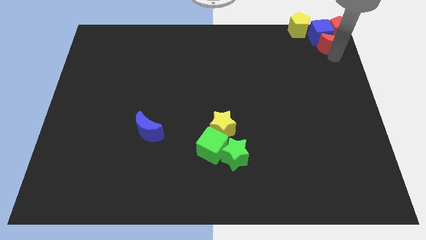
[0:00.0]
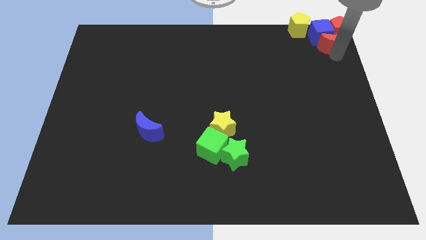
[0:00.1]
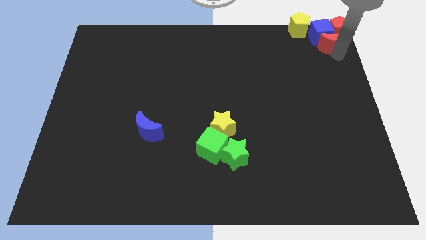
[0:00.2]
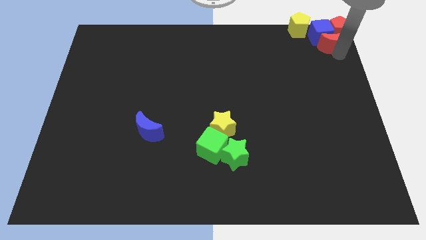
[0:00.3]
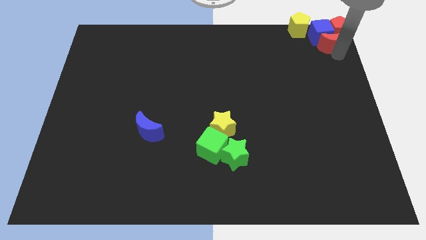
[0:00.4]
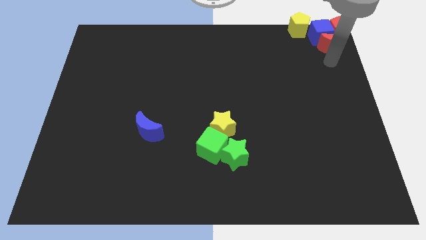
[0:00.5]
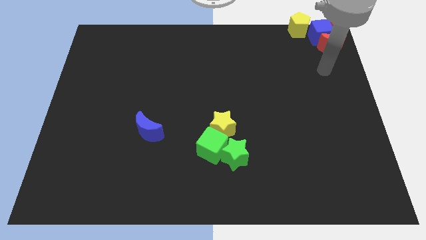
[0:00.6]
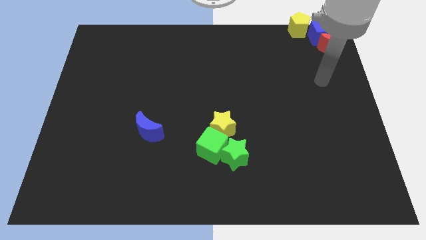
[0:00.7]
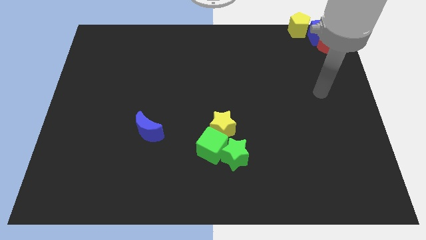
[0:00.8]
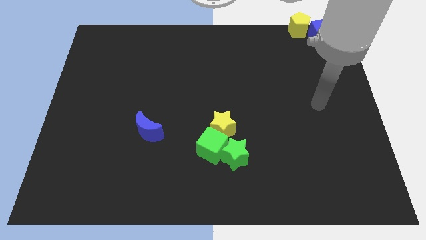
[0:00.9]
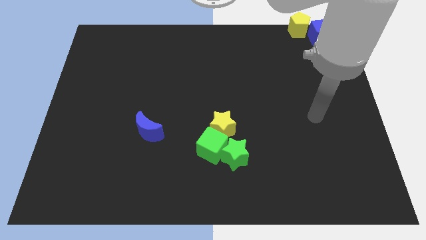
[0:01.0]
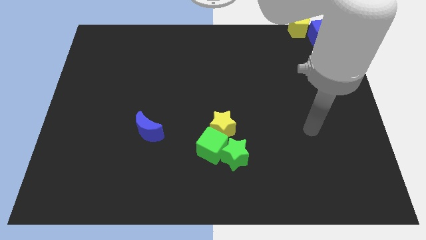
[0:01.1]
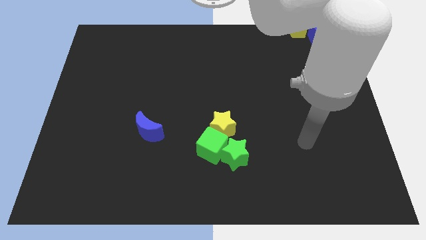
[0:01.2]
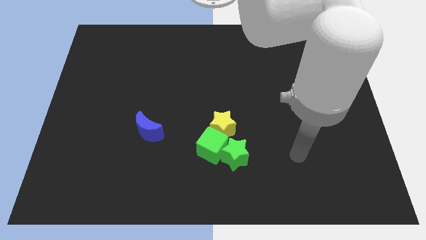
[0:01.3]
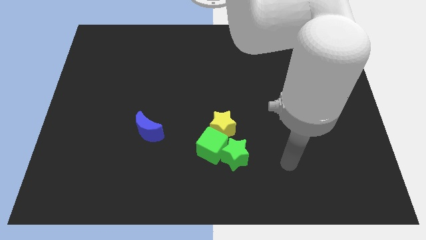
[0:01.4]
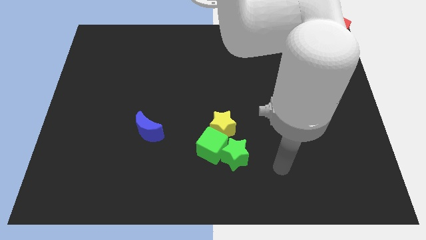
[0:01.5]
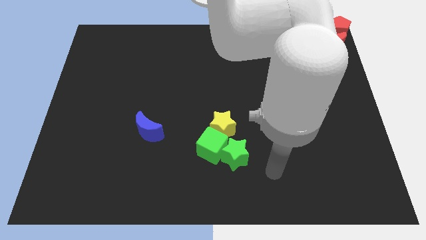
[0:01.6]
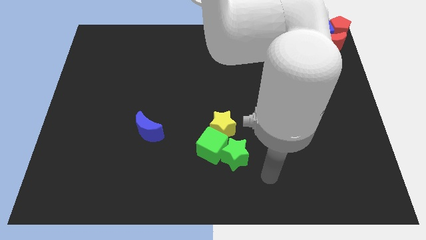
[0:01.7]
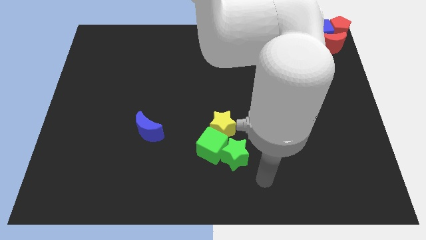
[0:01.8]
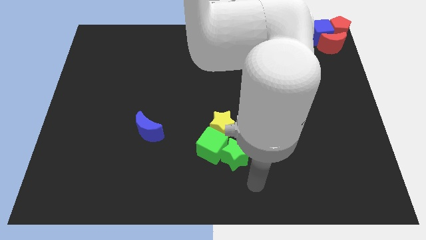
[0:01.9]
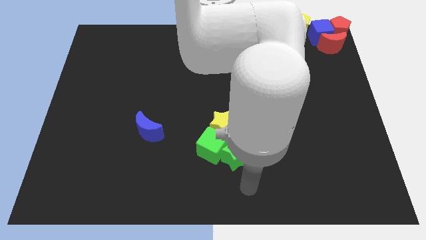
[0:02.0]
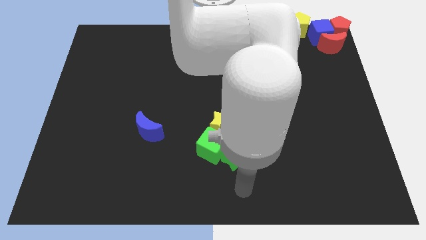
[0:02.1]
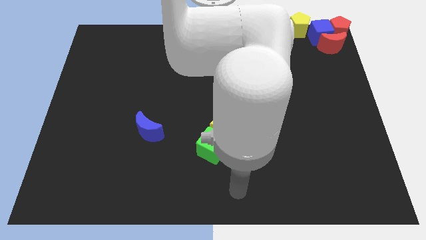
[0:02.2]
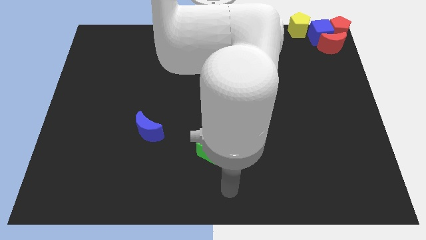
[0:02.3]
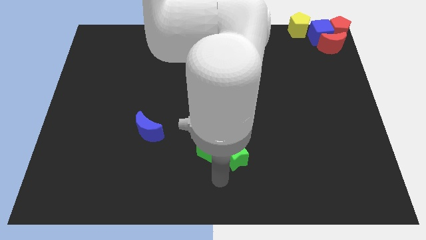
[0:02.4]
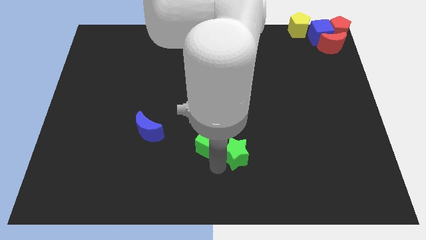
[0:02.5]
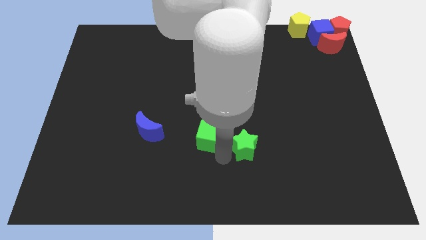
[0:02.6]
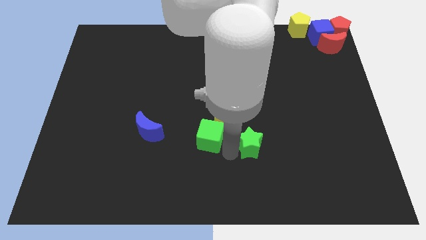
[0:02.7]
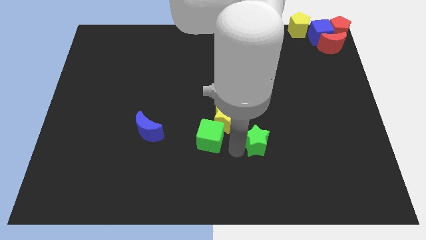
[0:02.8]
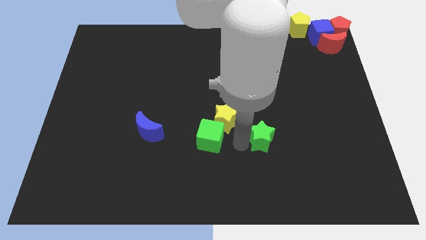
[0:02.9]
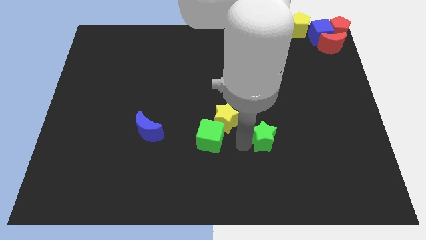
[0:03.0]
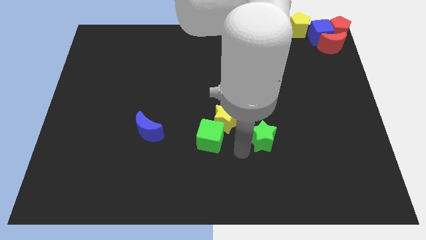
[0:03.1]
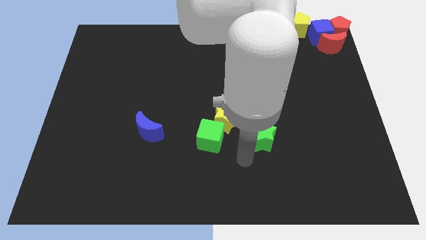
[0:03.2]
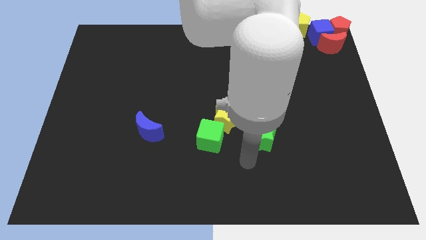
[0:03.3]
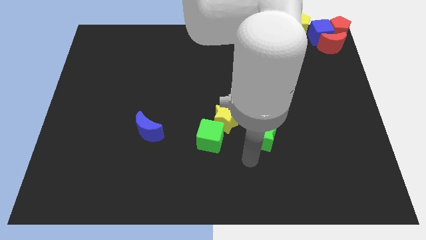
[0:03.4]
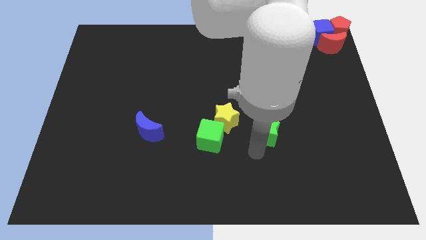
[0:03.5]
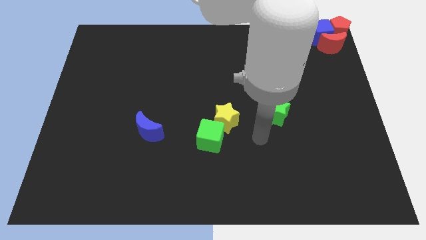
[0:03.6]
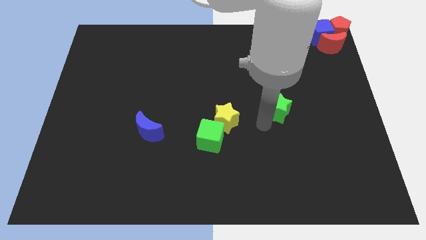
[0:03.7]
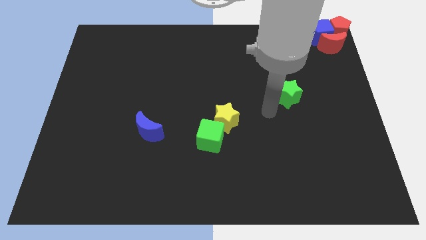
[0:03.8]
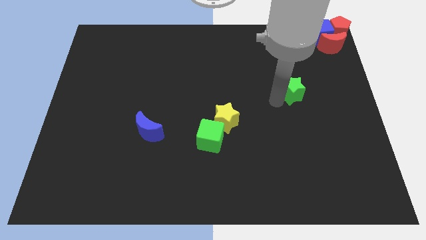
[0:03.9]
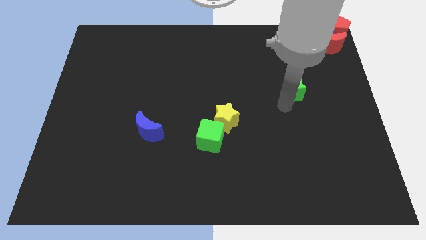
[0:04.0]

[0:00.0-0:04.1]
separate the green star from the green cube

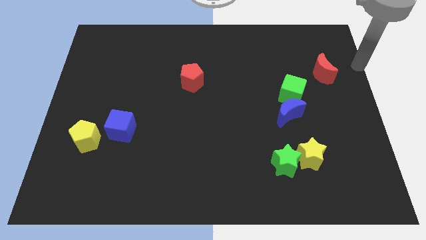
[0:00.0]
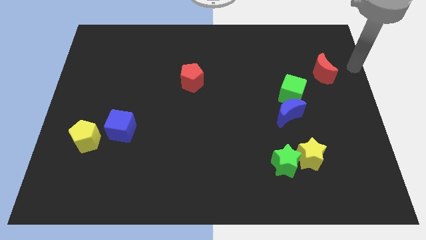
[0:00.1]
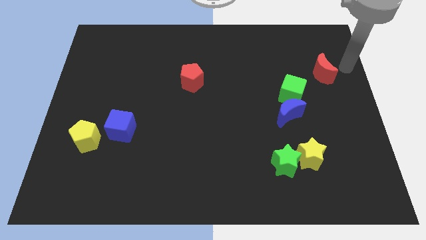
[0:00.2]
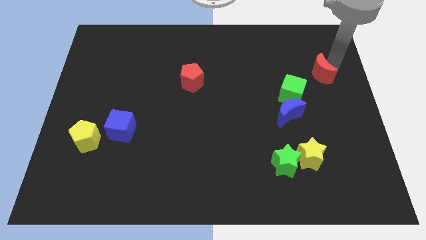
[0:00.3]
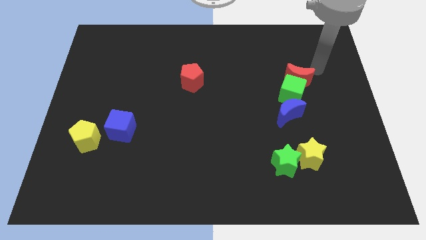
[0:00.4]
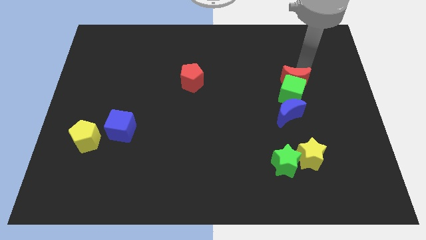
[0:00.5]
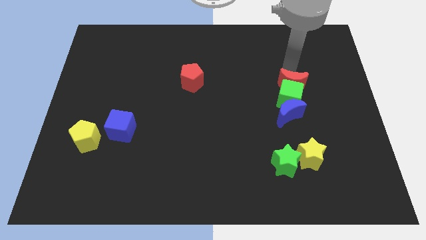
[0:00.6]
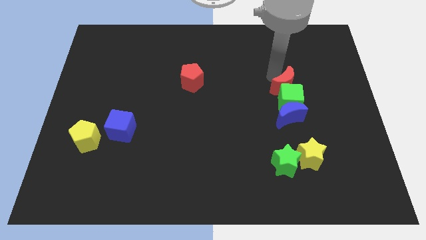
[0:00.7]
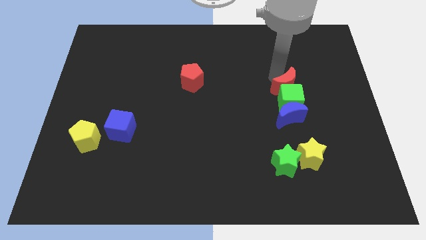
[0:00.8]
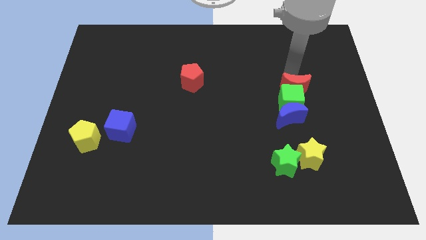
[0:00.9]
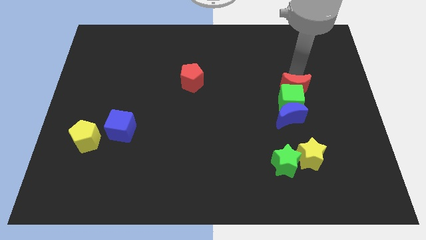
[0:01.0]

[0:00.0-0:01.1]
push the red crescent into the green bock

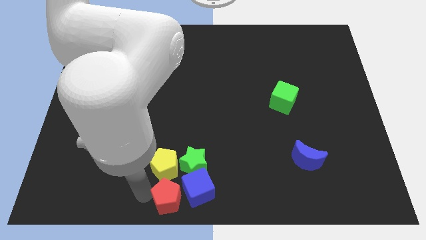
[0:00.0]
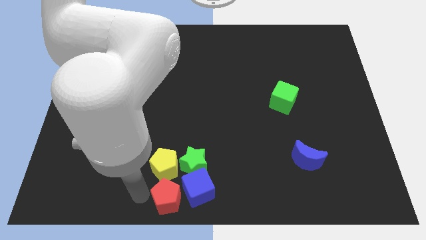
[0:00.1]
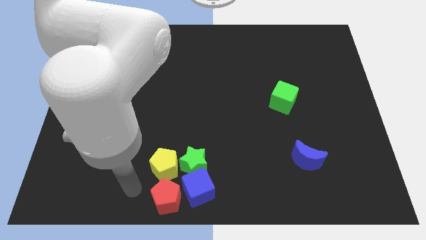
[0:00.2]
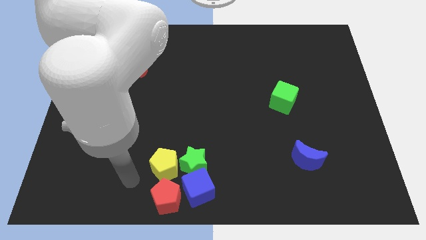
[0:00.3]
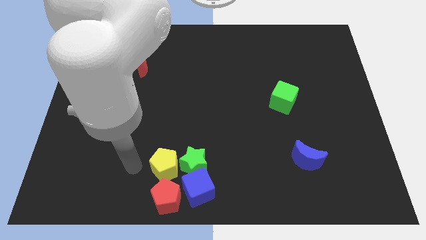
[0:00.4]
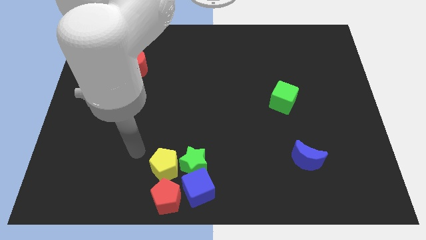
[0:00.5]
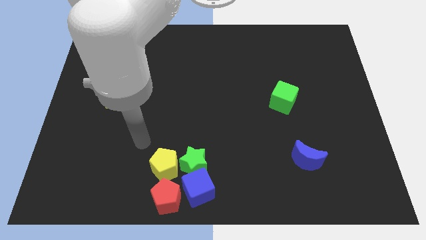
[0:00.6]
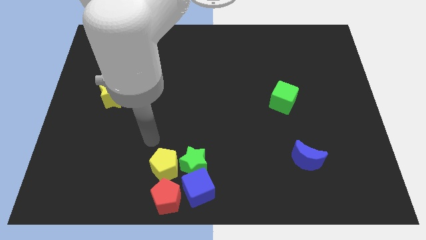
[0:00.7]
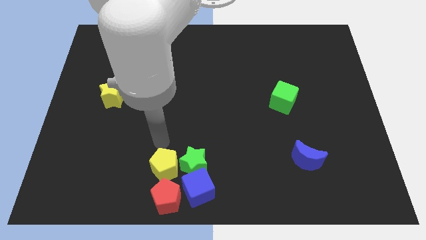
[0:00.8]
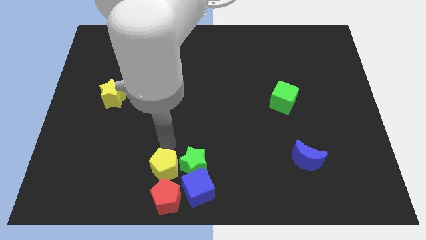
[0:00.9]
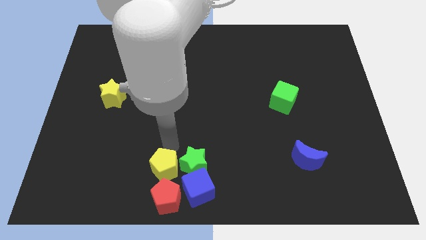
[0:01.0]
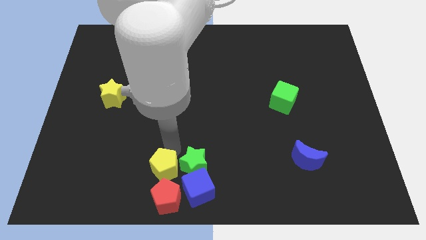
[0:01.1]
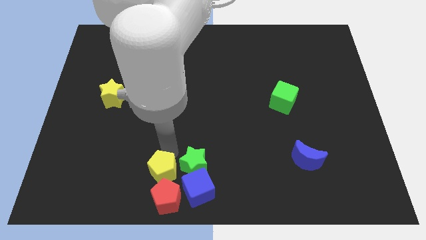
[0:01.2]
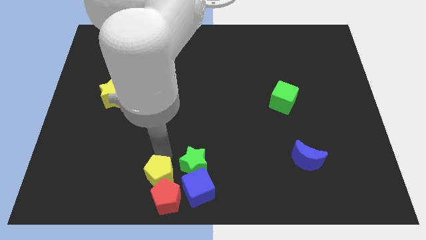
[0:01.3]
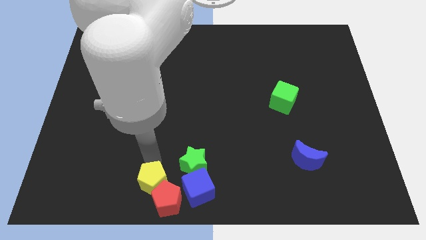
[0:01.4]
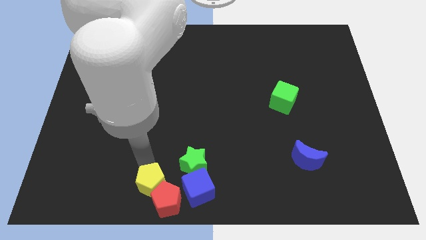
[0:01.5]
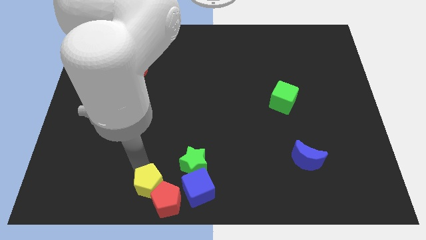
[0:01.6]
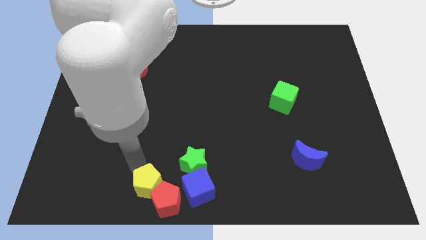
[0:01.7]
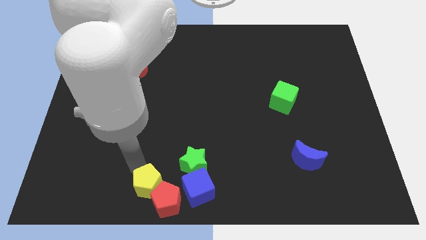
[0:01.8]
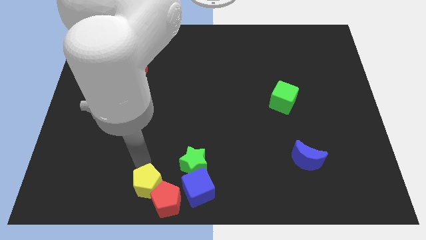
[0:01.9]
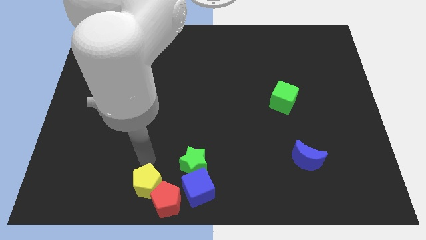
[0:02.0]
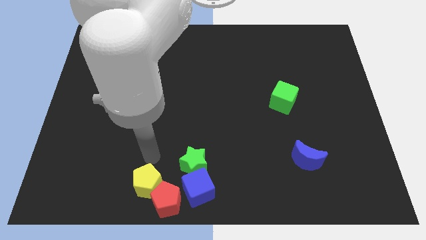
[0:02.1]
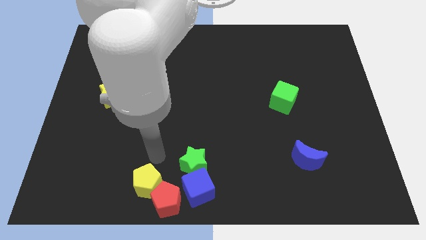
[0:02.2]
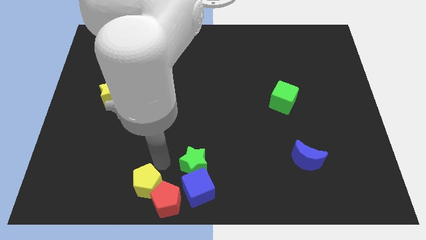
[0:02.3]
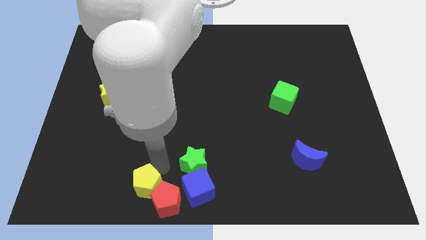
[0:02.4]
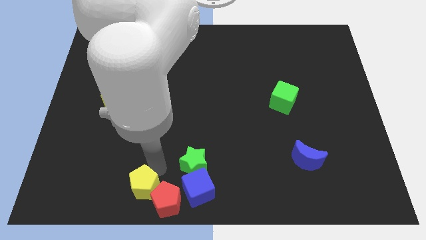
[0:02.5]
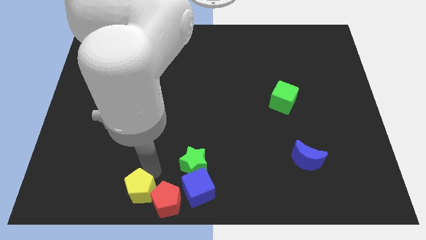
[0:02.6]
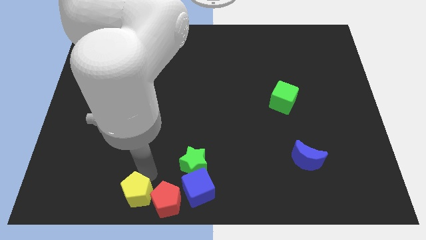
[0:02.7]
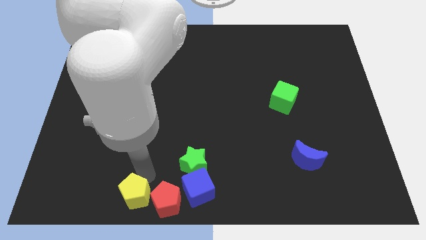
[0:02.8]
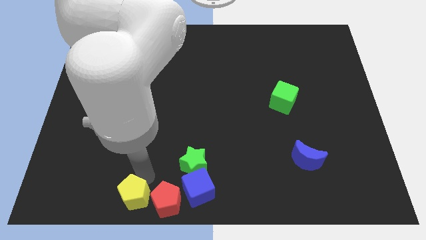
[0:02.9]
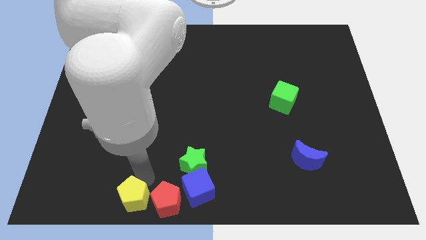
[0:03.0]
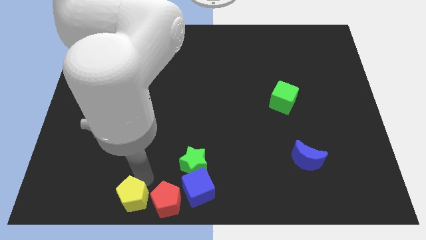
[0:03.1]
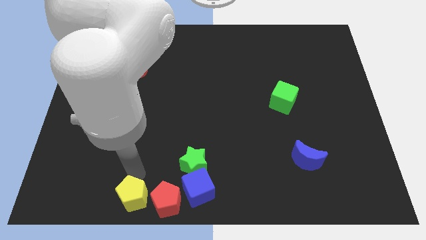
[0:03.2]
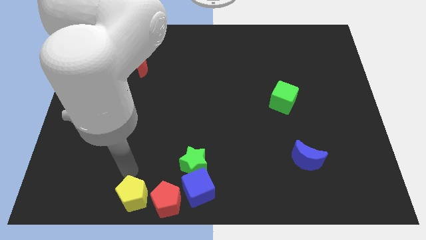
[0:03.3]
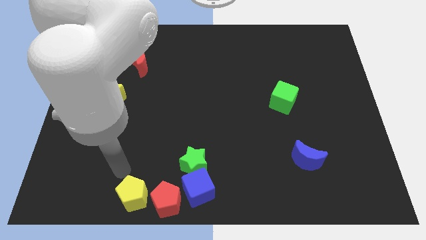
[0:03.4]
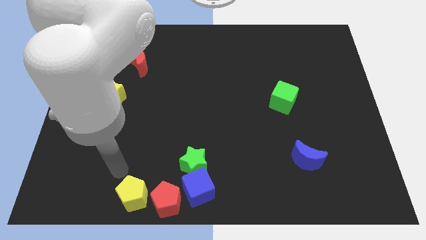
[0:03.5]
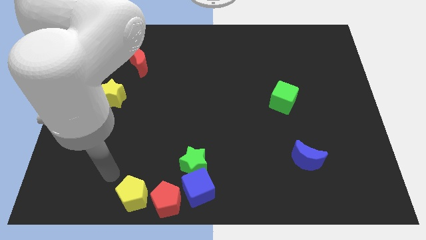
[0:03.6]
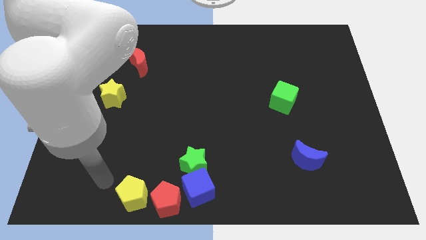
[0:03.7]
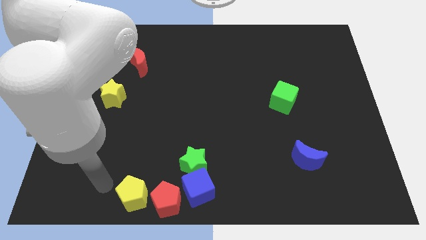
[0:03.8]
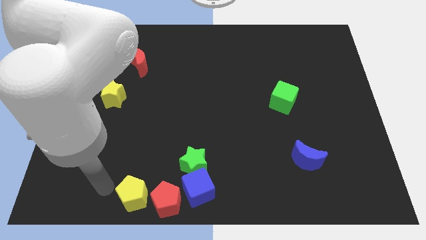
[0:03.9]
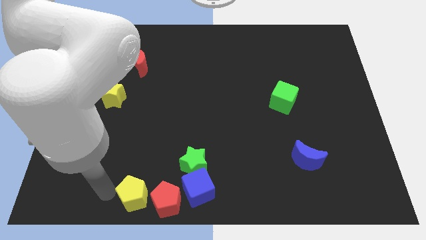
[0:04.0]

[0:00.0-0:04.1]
move yellow pentagon near to the red pentagon
